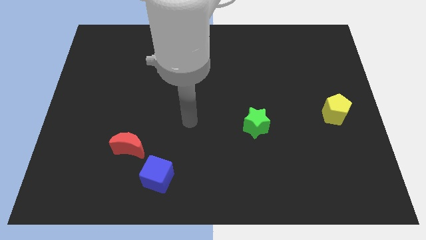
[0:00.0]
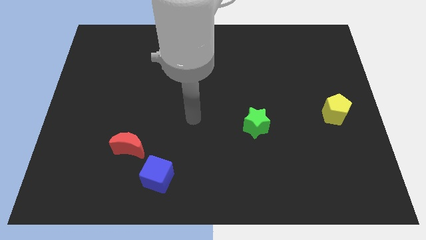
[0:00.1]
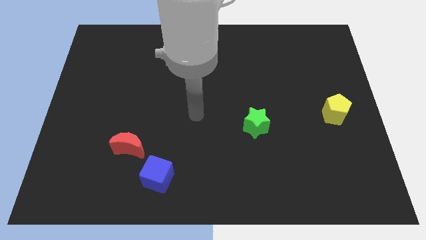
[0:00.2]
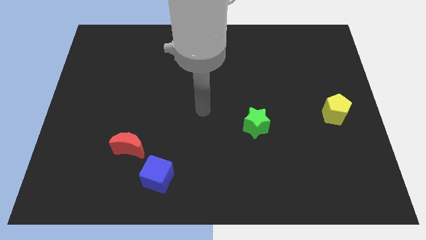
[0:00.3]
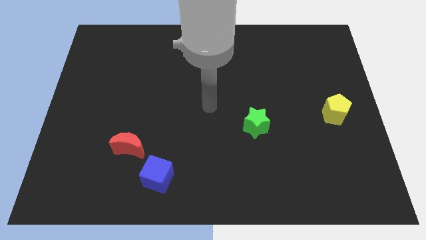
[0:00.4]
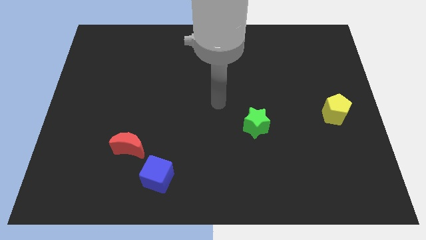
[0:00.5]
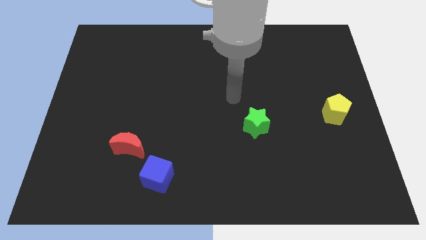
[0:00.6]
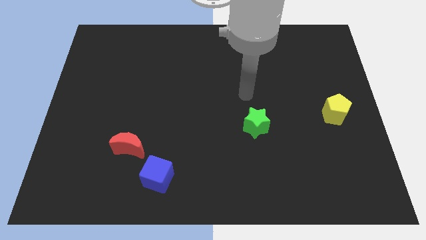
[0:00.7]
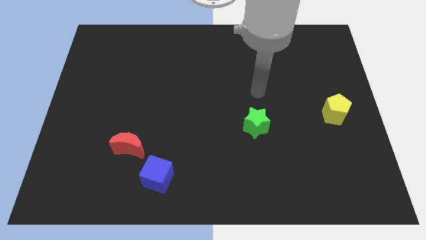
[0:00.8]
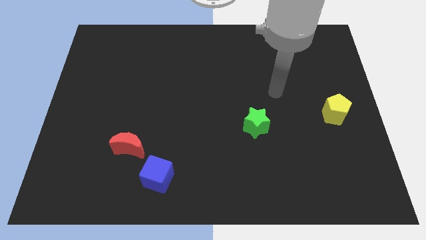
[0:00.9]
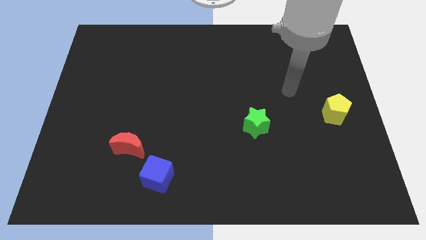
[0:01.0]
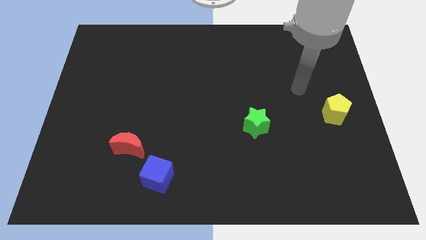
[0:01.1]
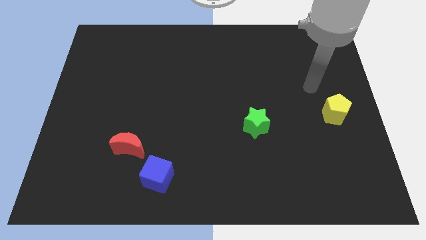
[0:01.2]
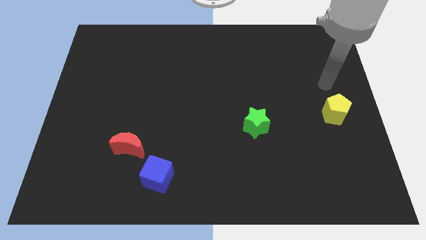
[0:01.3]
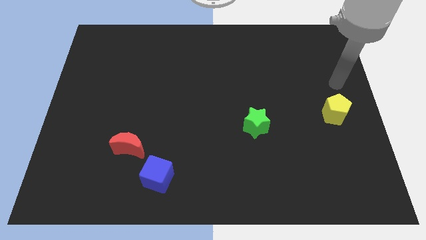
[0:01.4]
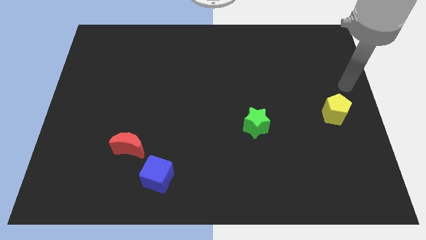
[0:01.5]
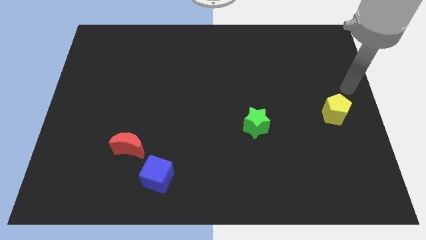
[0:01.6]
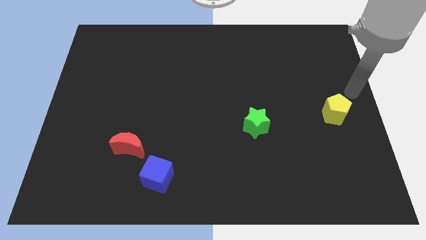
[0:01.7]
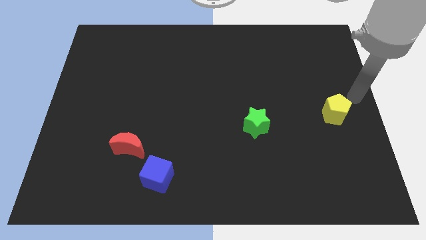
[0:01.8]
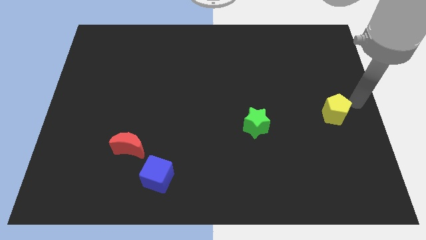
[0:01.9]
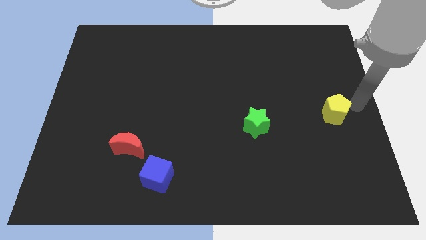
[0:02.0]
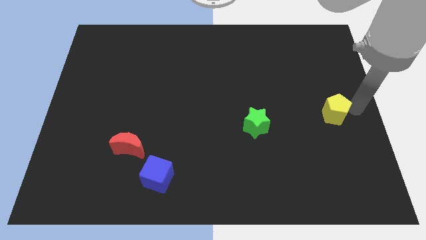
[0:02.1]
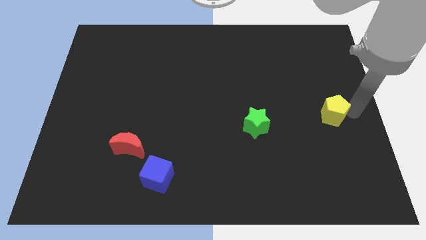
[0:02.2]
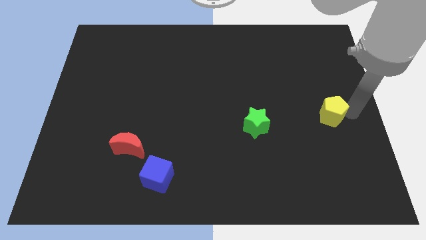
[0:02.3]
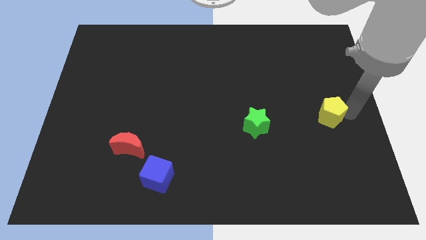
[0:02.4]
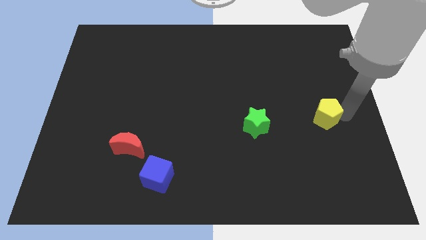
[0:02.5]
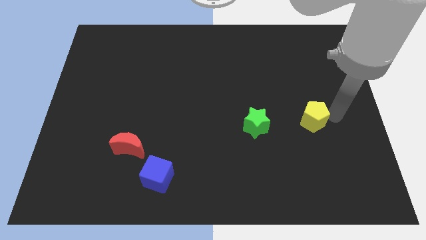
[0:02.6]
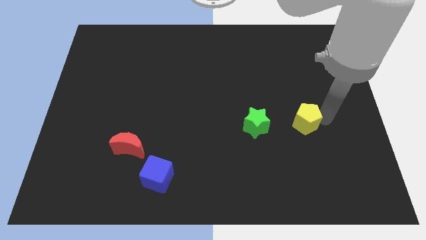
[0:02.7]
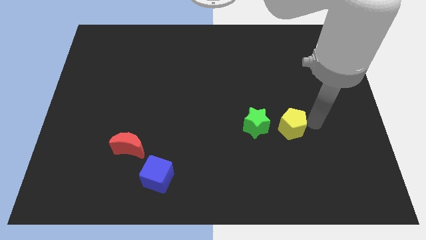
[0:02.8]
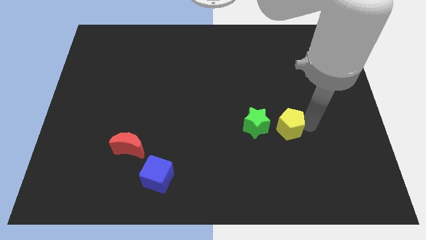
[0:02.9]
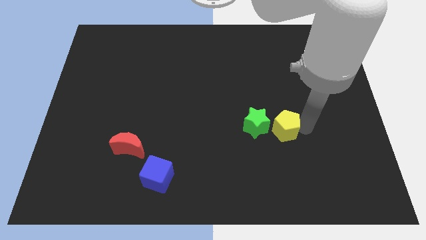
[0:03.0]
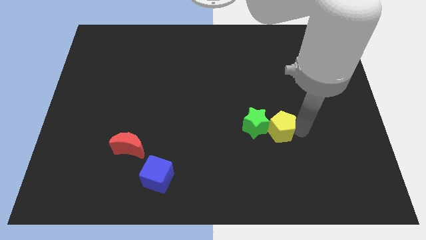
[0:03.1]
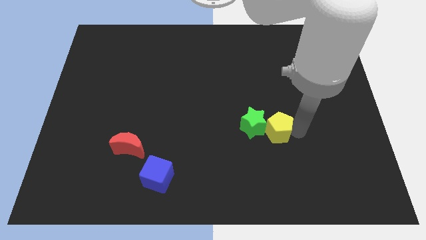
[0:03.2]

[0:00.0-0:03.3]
move the pentagon next to the green star

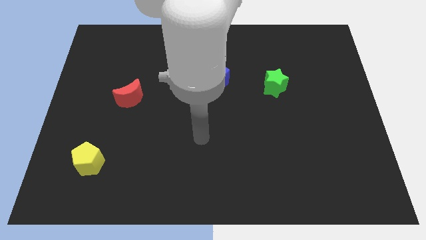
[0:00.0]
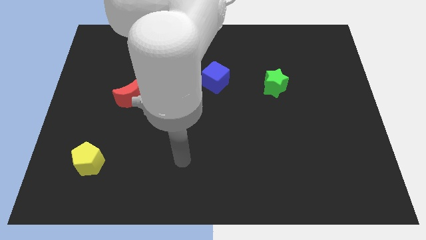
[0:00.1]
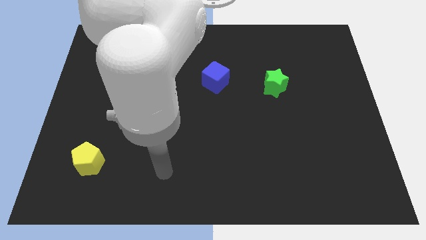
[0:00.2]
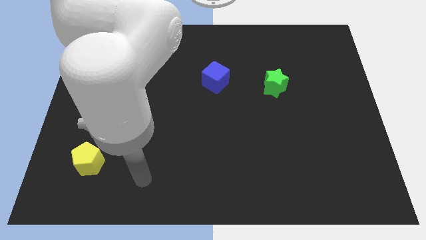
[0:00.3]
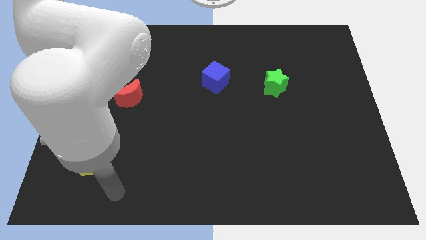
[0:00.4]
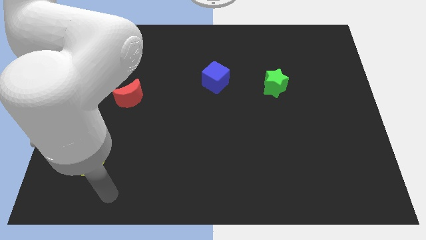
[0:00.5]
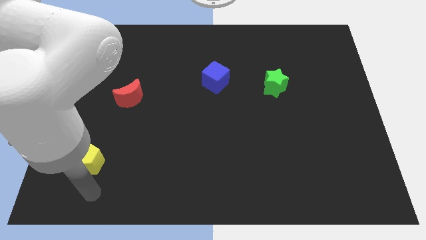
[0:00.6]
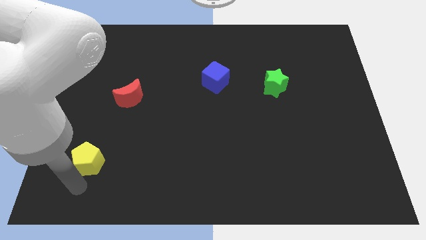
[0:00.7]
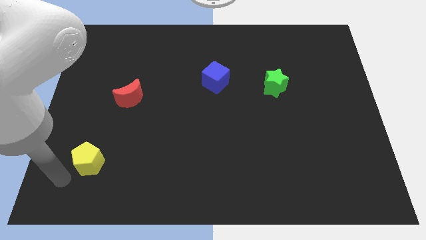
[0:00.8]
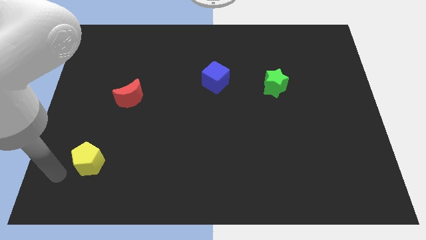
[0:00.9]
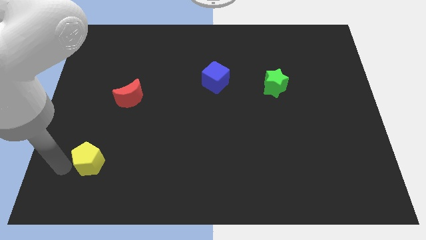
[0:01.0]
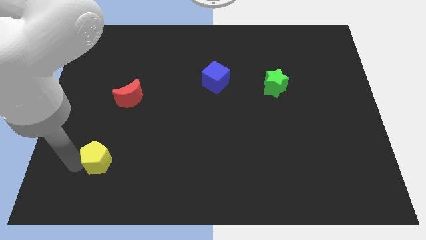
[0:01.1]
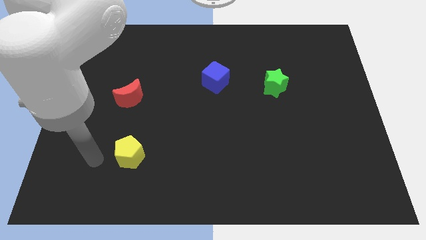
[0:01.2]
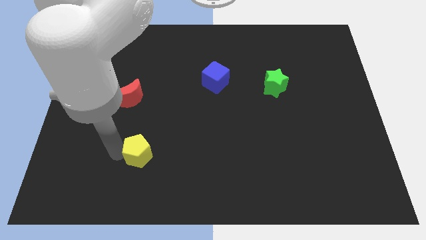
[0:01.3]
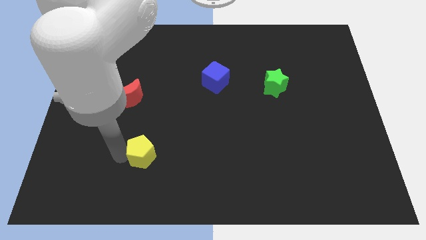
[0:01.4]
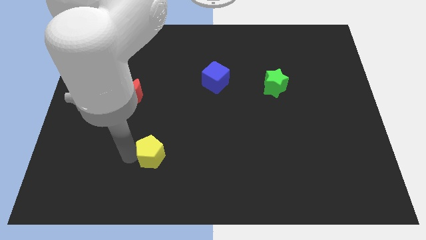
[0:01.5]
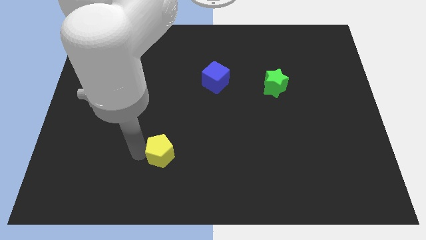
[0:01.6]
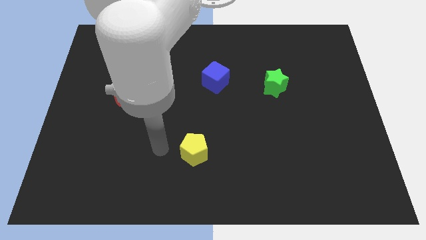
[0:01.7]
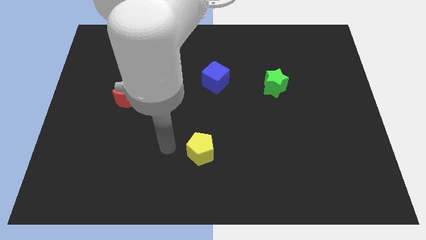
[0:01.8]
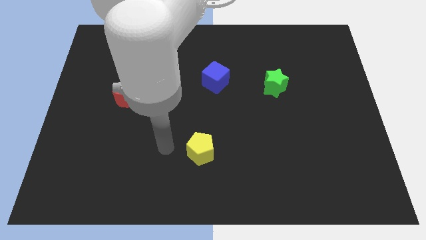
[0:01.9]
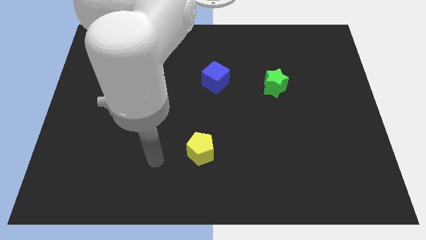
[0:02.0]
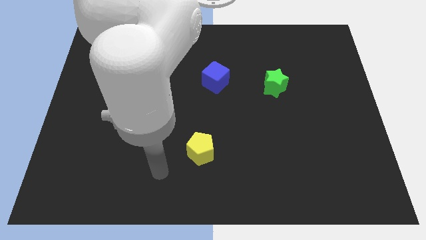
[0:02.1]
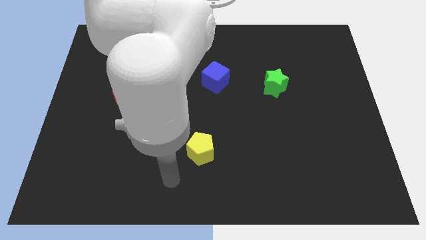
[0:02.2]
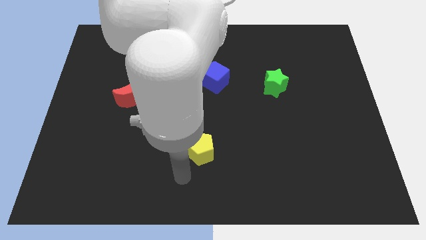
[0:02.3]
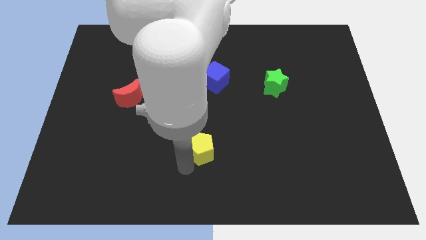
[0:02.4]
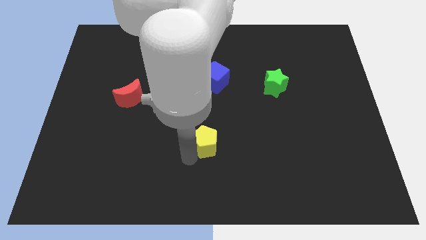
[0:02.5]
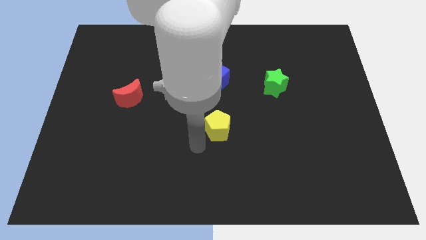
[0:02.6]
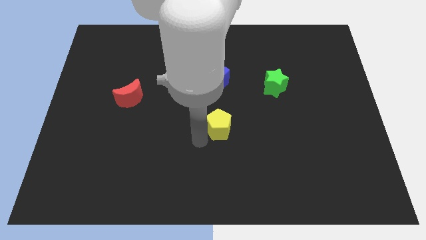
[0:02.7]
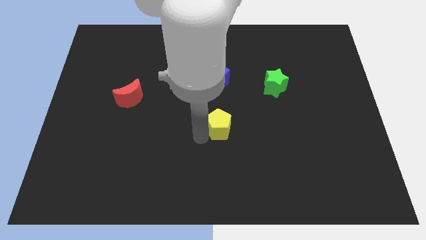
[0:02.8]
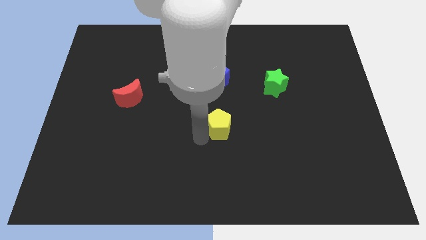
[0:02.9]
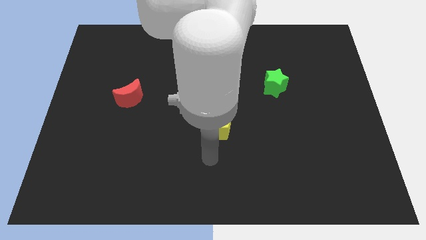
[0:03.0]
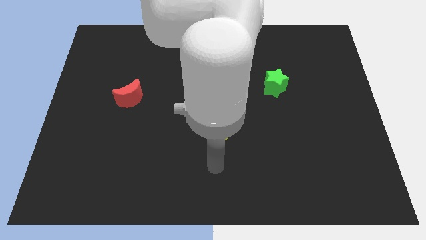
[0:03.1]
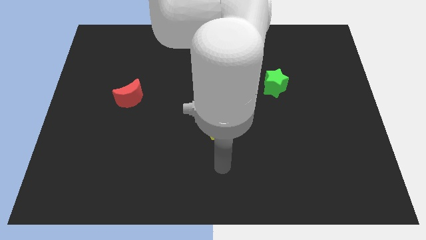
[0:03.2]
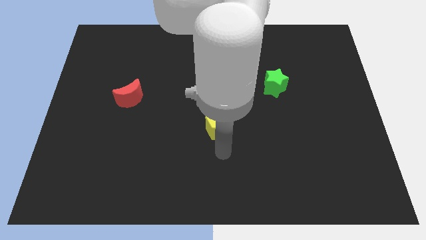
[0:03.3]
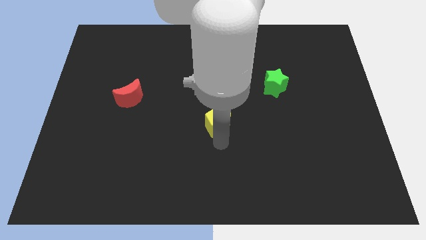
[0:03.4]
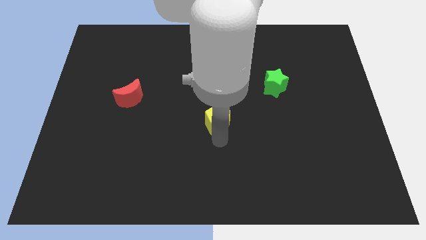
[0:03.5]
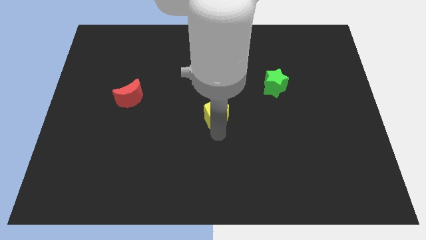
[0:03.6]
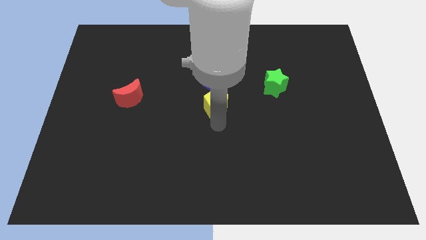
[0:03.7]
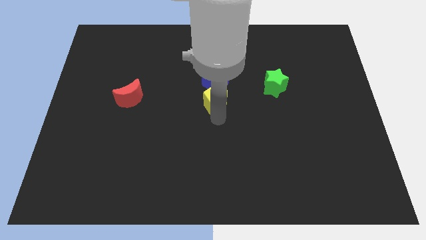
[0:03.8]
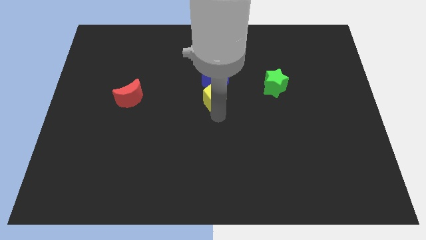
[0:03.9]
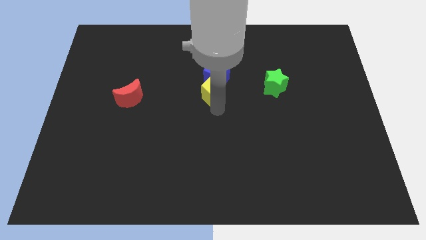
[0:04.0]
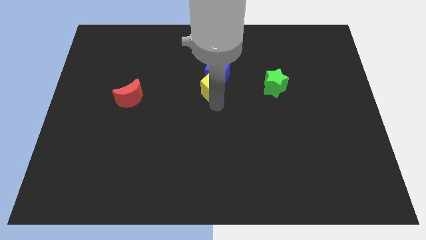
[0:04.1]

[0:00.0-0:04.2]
move the yellow block close to the cube

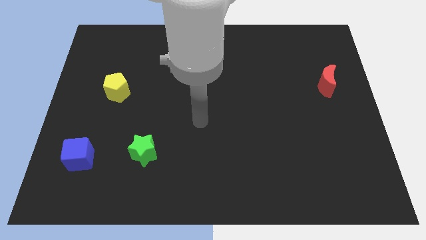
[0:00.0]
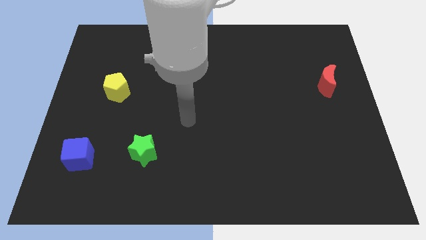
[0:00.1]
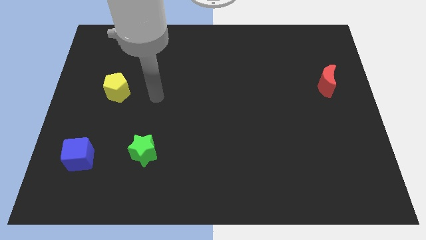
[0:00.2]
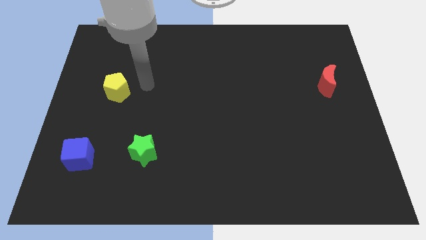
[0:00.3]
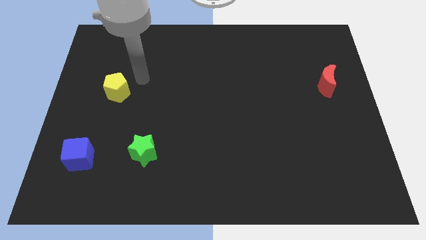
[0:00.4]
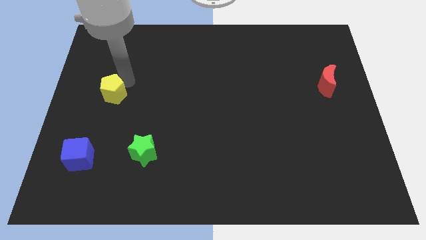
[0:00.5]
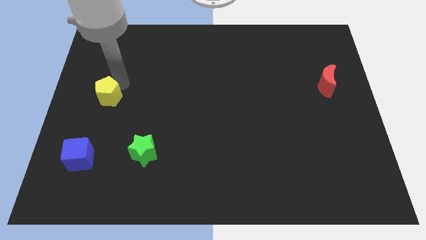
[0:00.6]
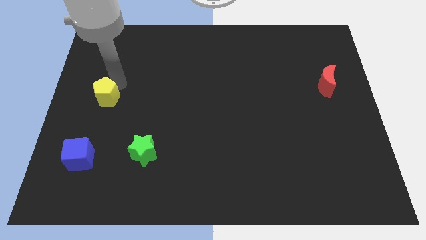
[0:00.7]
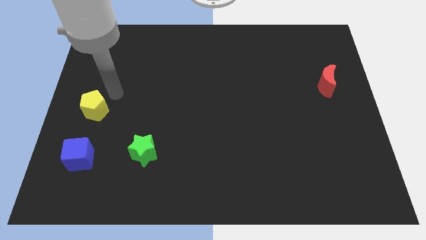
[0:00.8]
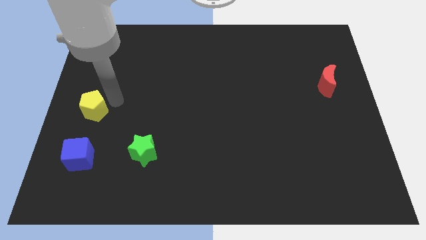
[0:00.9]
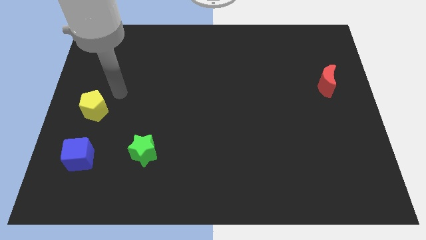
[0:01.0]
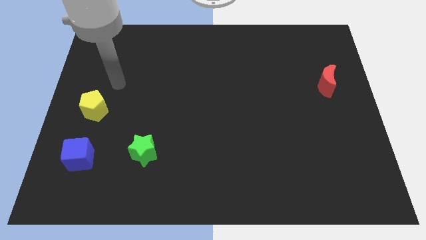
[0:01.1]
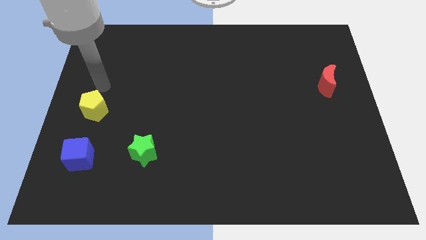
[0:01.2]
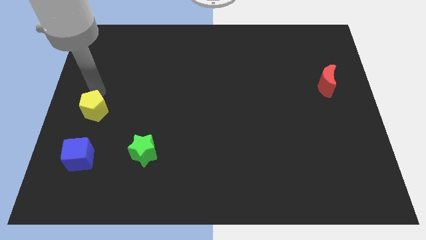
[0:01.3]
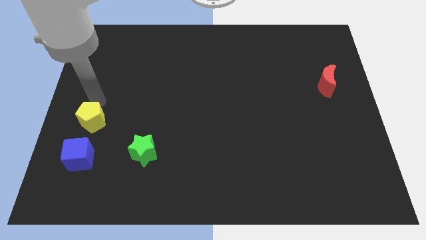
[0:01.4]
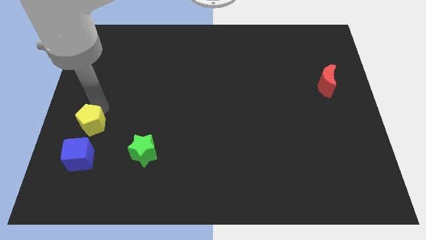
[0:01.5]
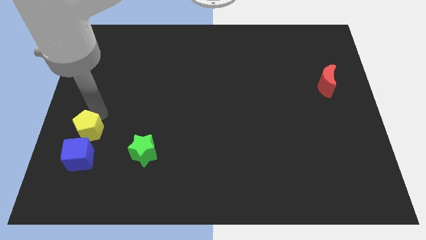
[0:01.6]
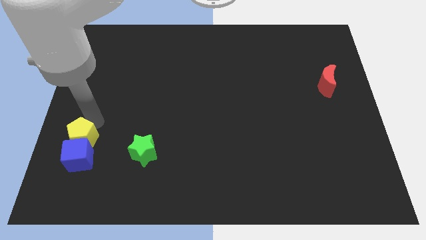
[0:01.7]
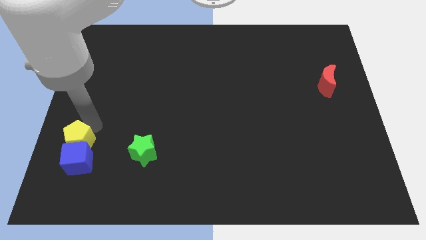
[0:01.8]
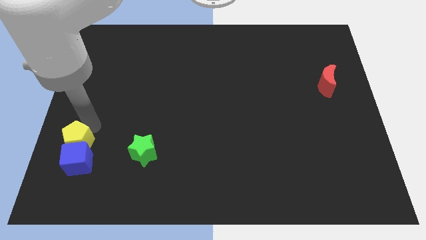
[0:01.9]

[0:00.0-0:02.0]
put the pentagon to the blue block
